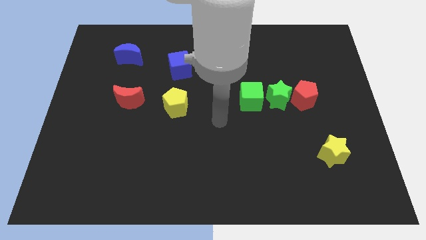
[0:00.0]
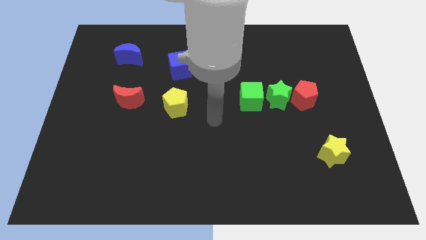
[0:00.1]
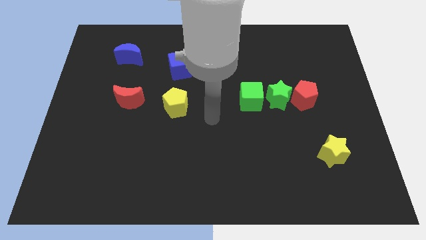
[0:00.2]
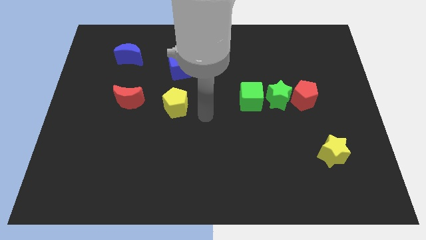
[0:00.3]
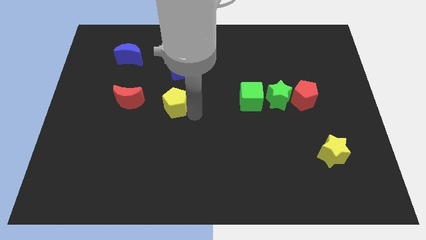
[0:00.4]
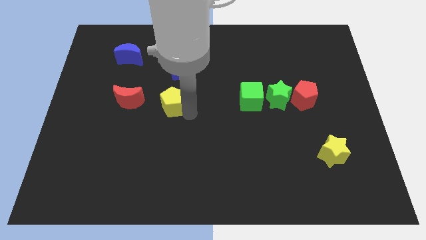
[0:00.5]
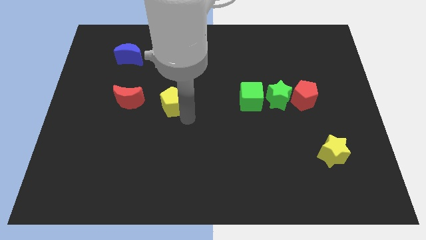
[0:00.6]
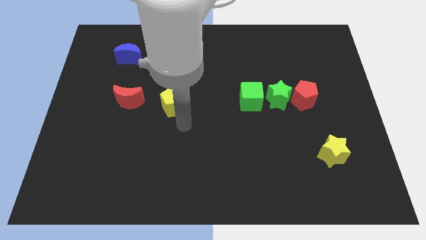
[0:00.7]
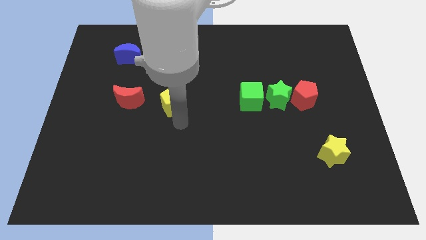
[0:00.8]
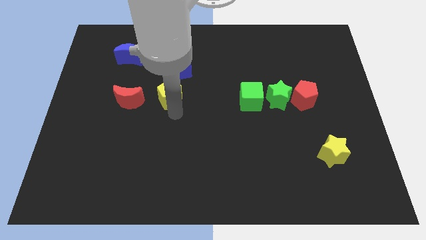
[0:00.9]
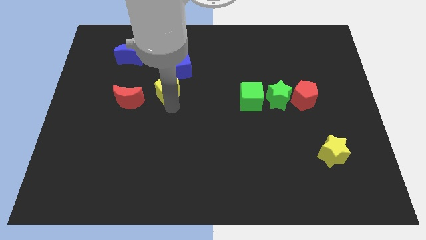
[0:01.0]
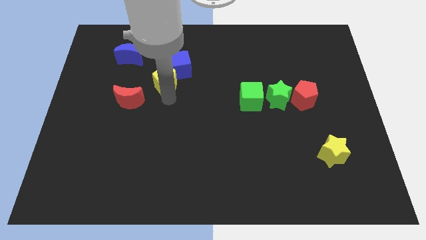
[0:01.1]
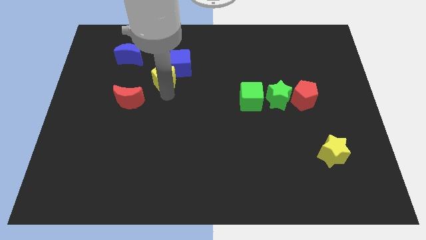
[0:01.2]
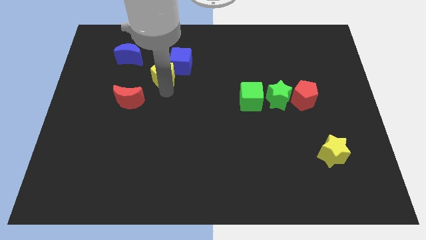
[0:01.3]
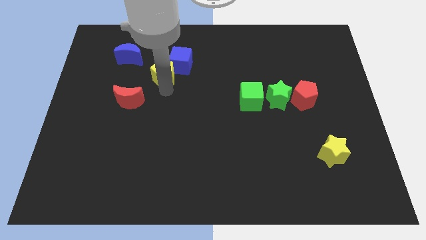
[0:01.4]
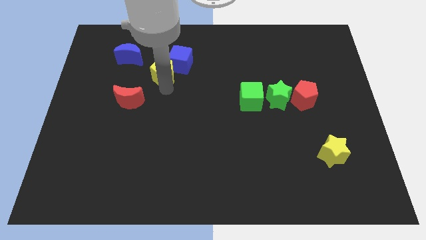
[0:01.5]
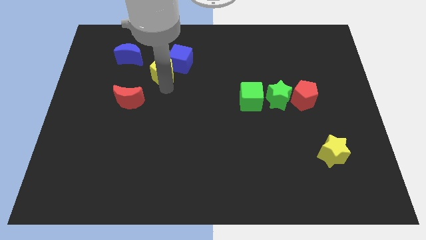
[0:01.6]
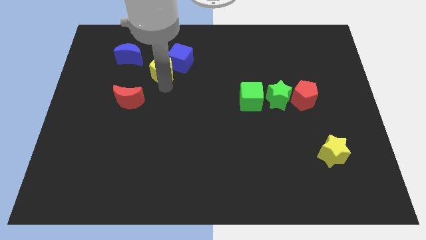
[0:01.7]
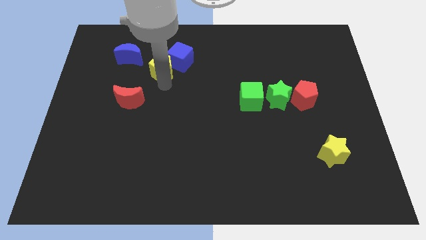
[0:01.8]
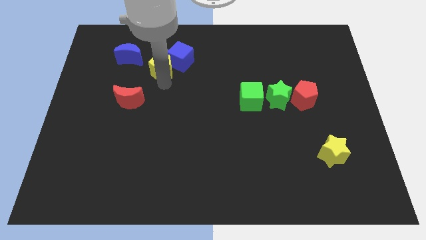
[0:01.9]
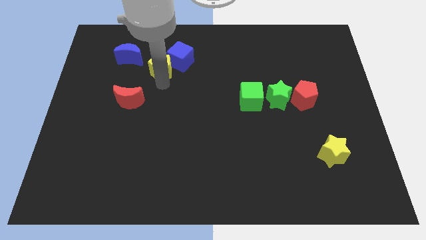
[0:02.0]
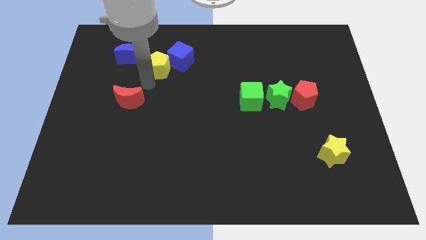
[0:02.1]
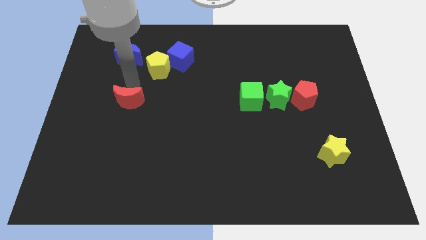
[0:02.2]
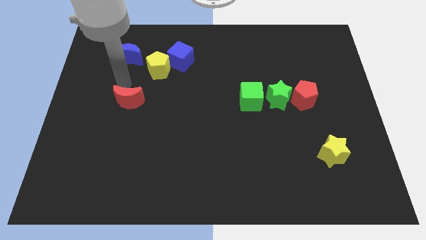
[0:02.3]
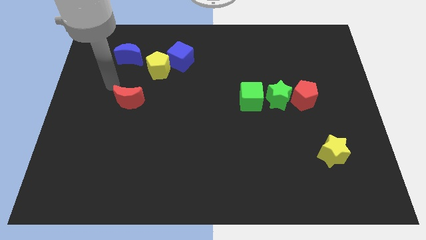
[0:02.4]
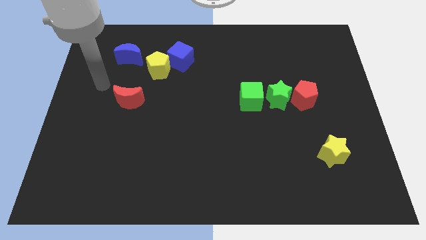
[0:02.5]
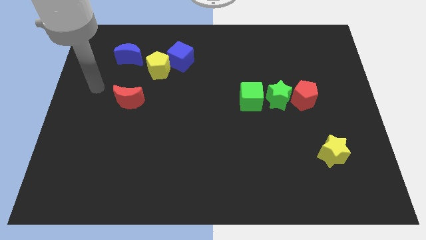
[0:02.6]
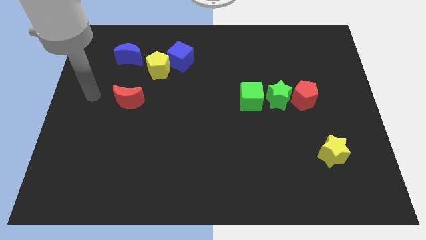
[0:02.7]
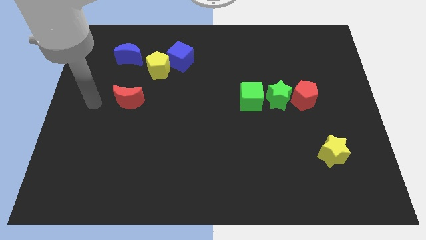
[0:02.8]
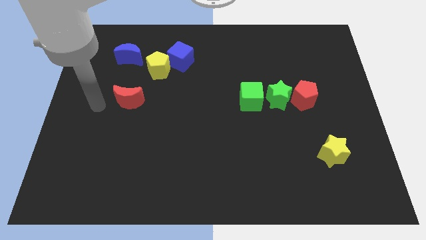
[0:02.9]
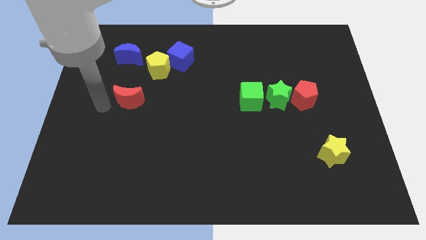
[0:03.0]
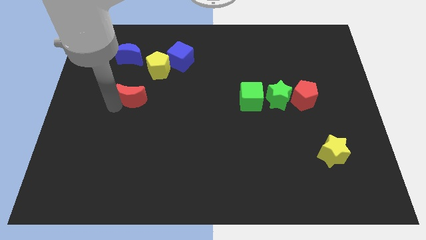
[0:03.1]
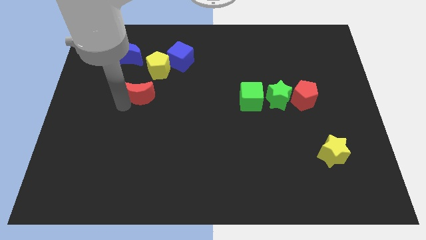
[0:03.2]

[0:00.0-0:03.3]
move yellow left below the blue cube

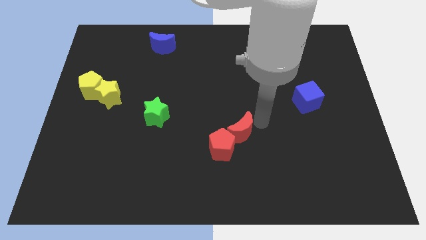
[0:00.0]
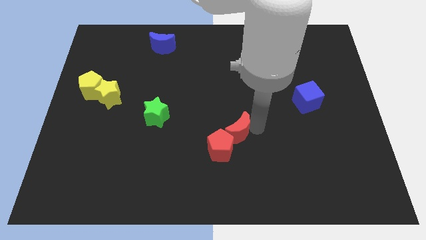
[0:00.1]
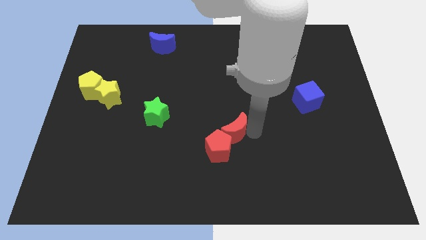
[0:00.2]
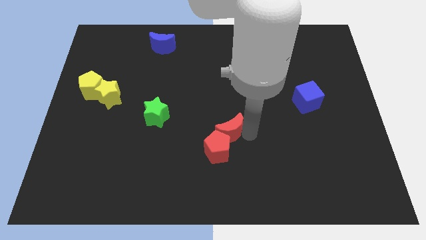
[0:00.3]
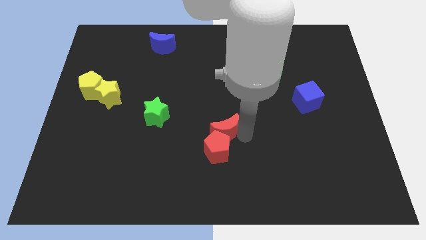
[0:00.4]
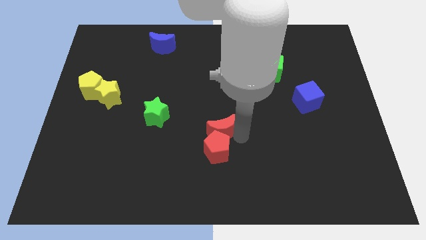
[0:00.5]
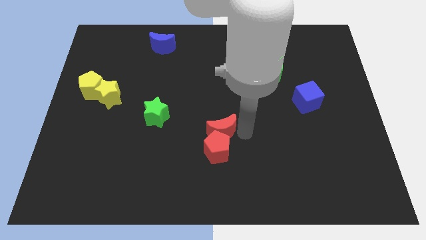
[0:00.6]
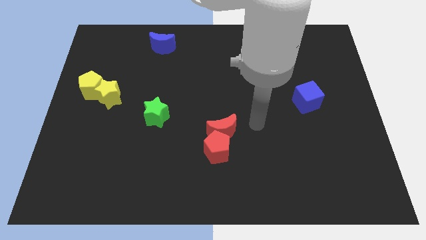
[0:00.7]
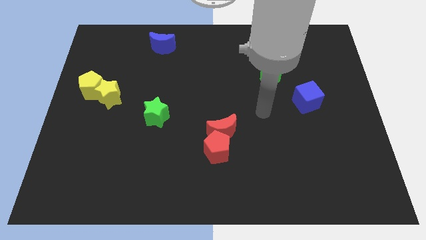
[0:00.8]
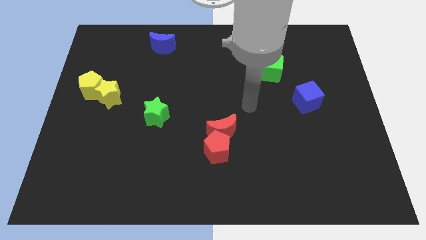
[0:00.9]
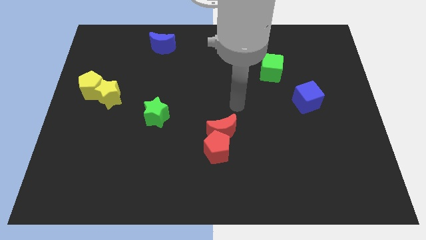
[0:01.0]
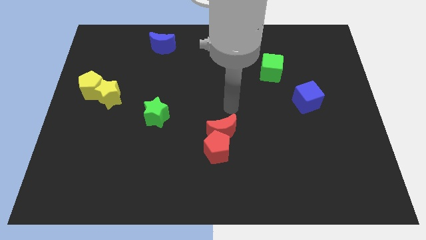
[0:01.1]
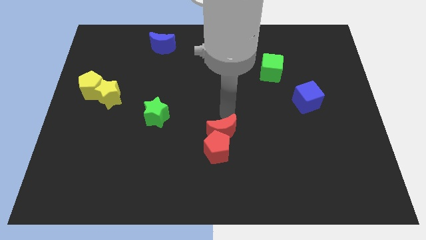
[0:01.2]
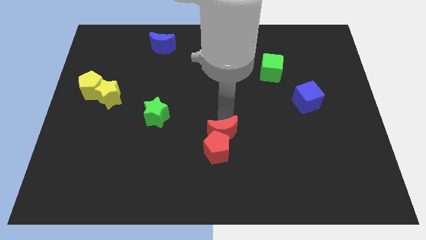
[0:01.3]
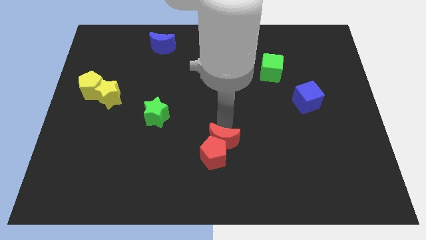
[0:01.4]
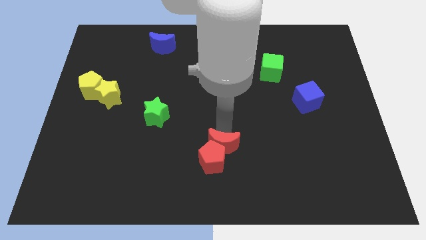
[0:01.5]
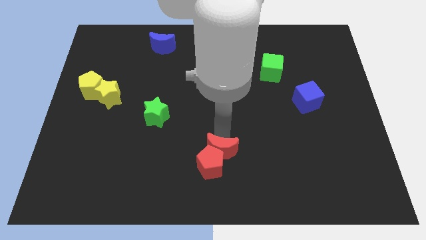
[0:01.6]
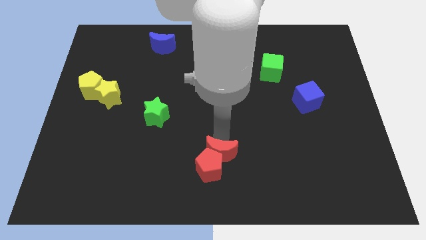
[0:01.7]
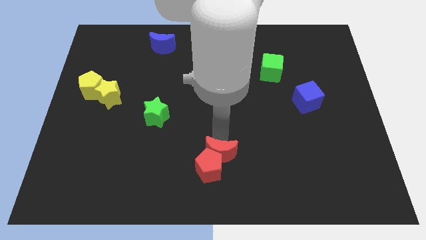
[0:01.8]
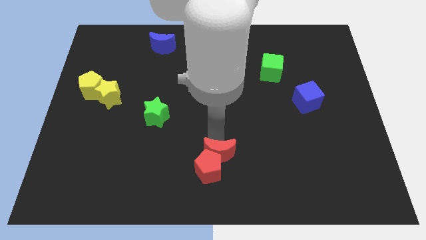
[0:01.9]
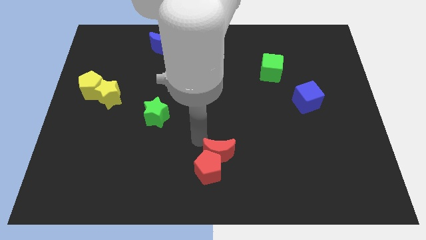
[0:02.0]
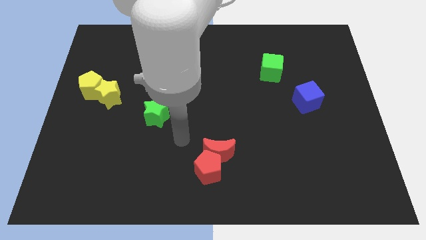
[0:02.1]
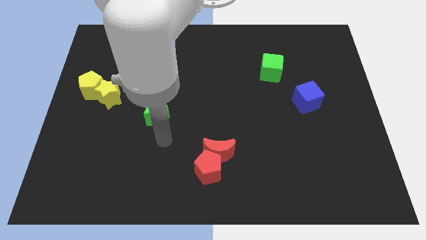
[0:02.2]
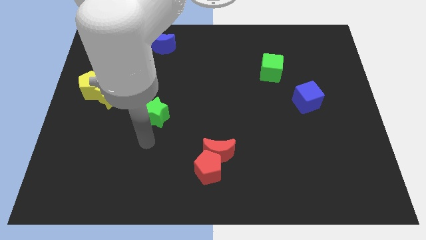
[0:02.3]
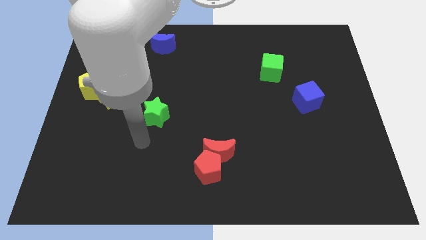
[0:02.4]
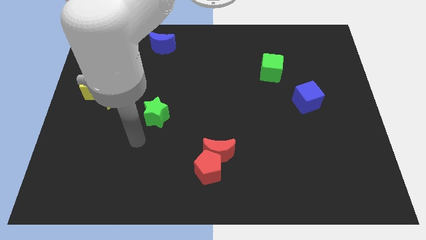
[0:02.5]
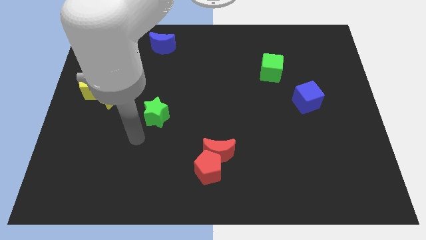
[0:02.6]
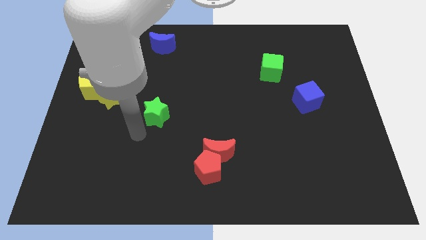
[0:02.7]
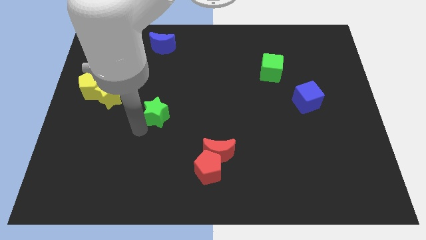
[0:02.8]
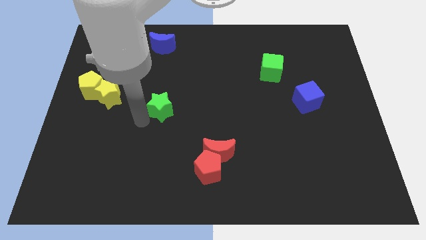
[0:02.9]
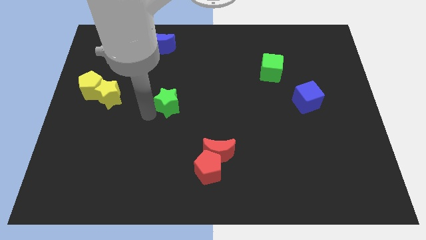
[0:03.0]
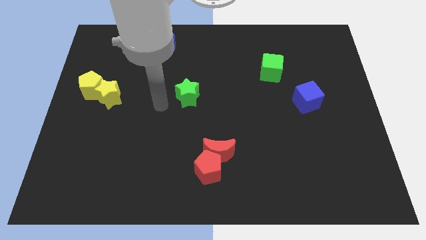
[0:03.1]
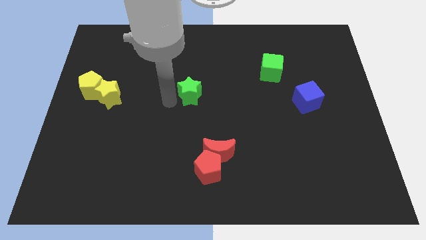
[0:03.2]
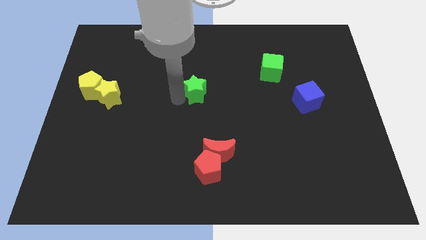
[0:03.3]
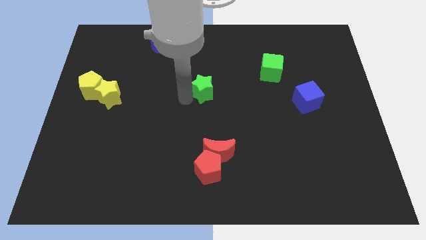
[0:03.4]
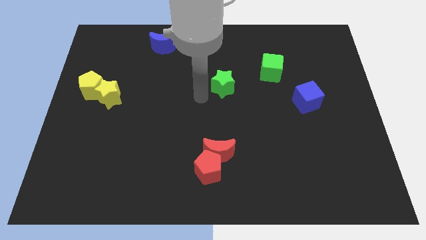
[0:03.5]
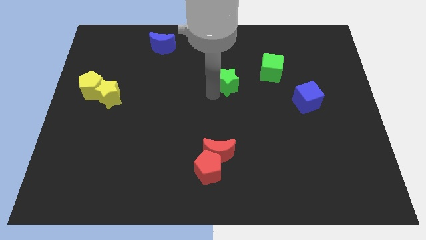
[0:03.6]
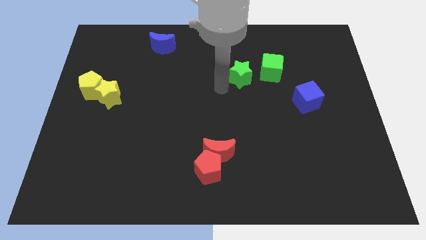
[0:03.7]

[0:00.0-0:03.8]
place the green star above the red crescent

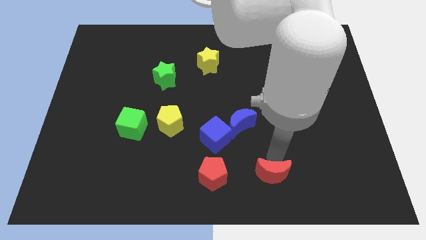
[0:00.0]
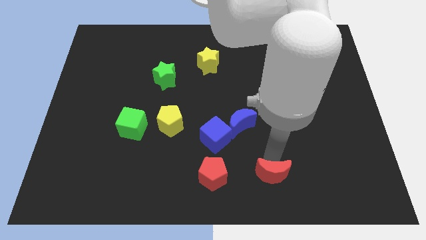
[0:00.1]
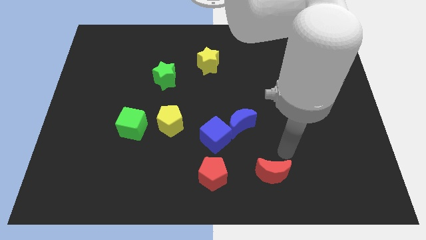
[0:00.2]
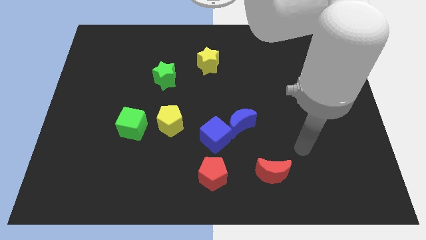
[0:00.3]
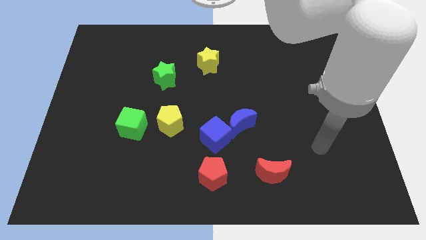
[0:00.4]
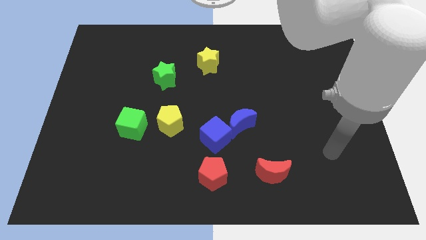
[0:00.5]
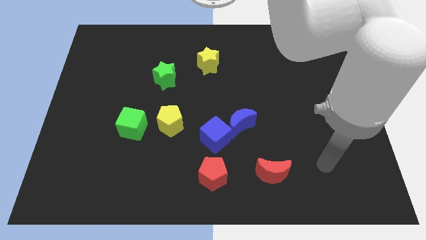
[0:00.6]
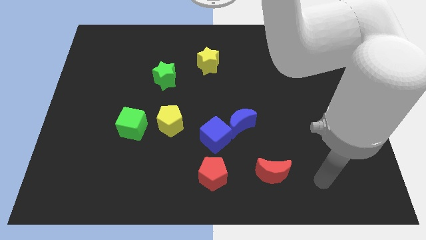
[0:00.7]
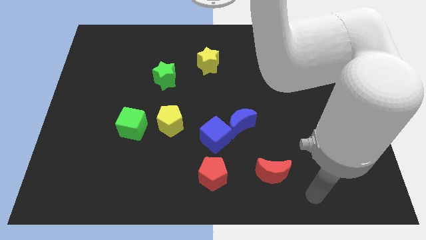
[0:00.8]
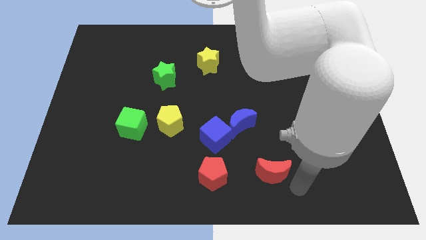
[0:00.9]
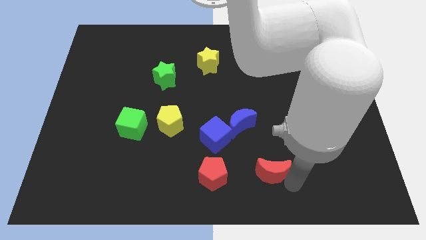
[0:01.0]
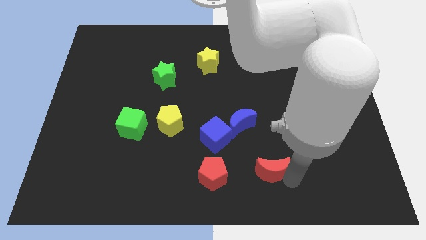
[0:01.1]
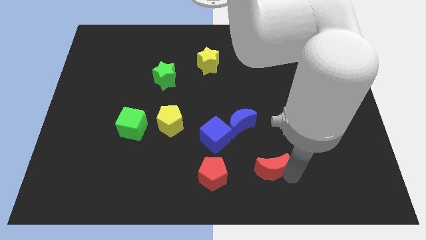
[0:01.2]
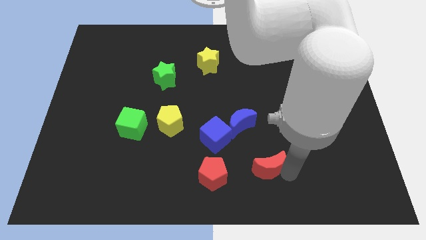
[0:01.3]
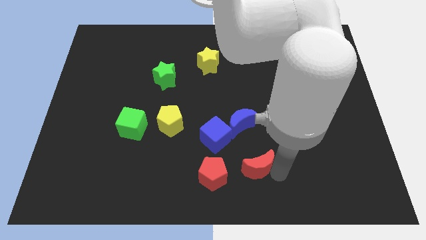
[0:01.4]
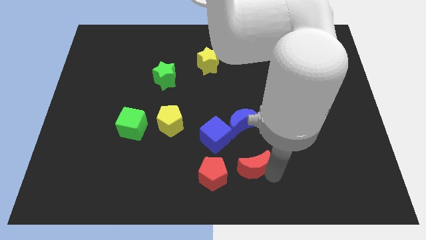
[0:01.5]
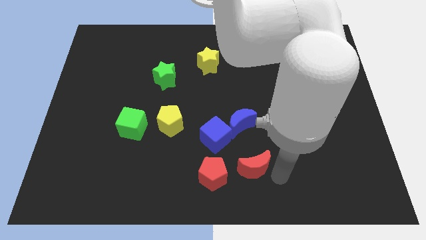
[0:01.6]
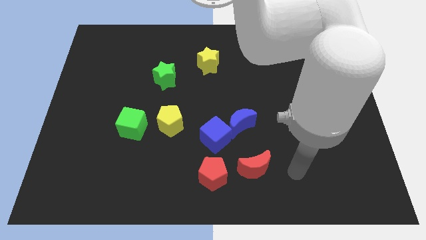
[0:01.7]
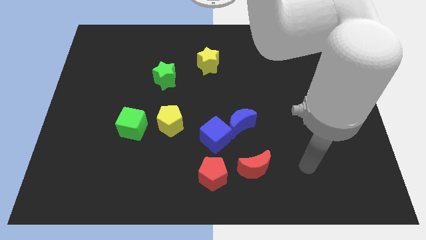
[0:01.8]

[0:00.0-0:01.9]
move the red moon close to the red pentagon
